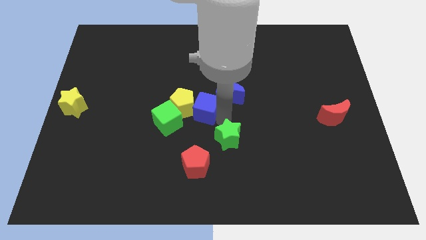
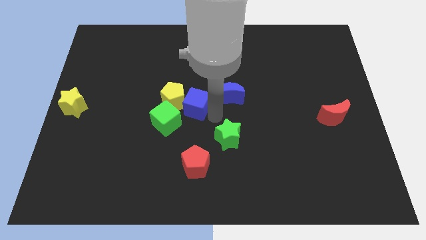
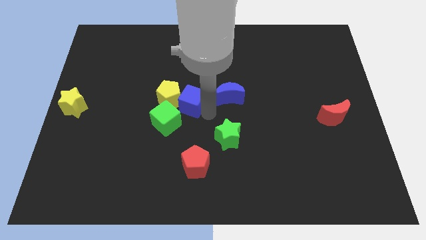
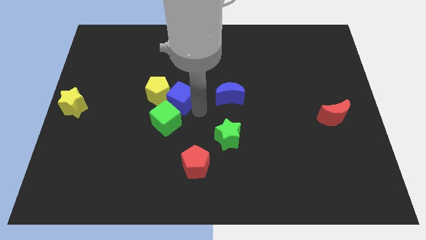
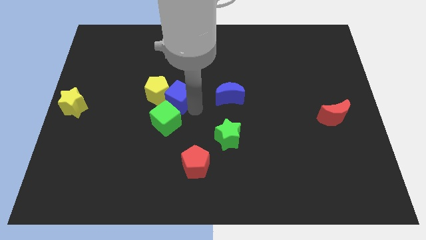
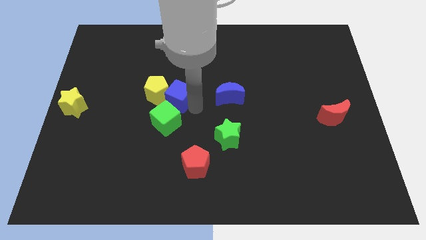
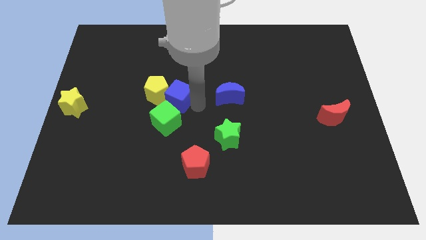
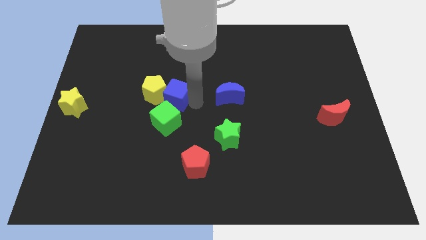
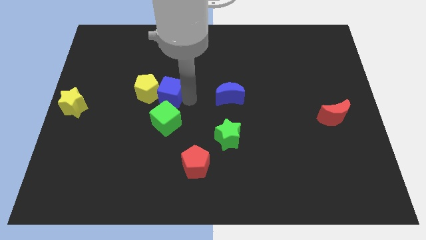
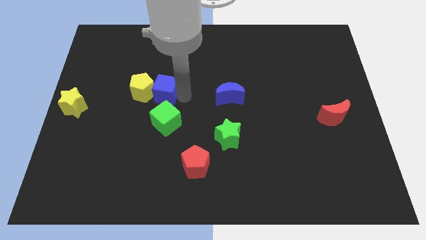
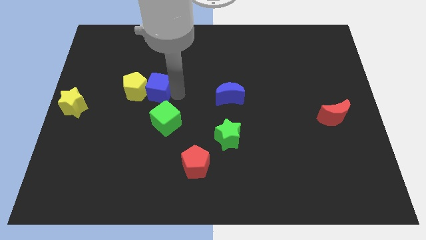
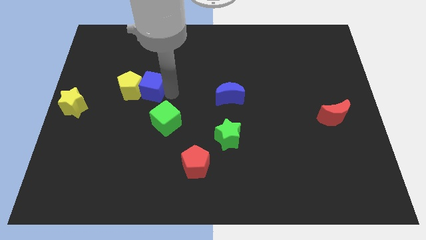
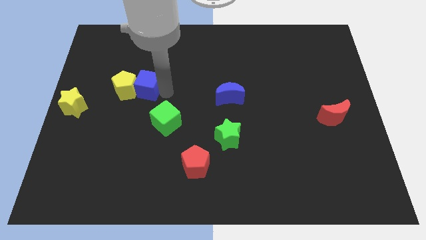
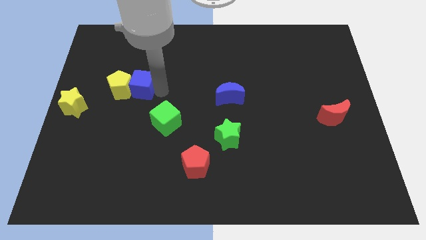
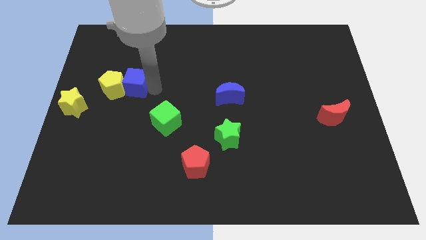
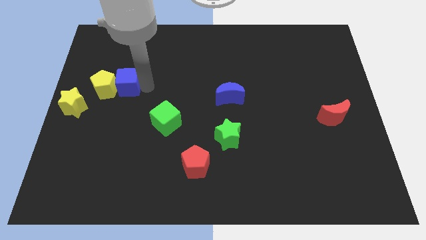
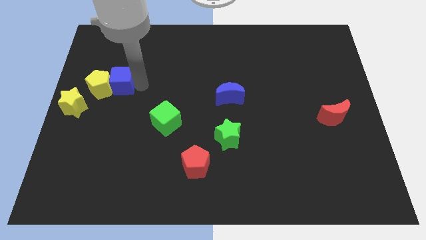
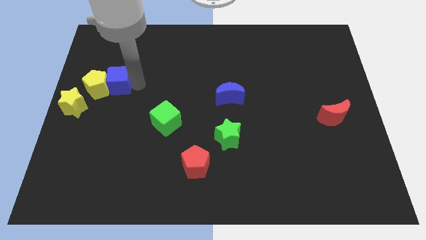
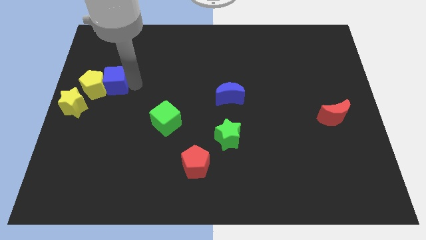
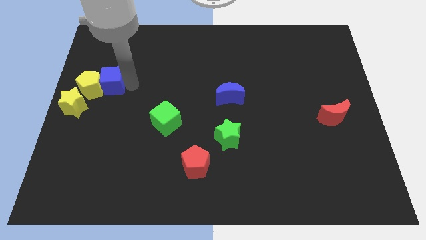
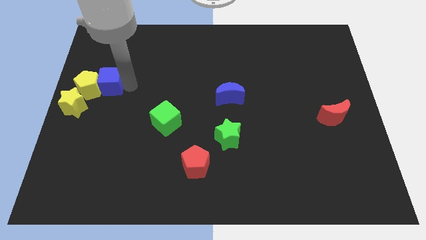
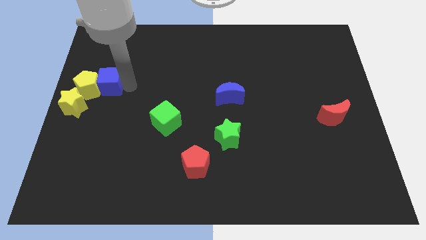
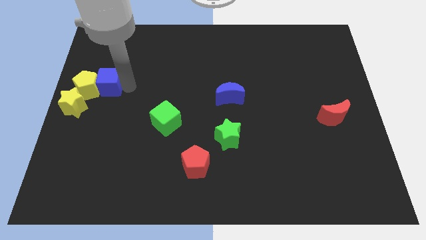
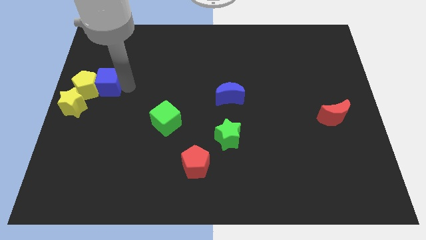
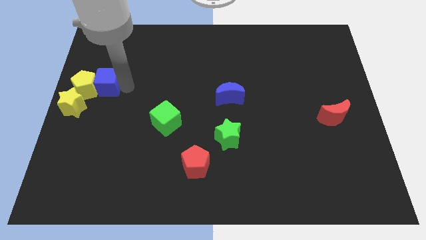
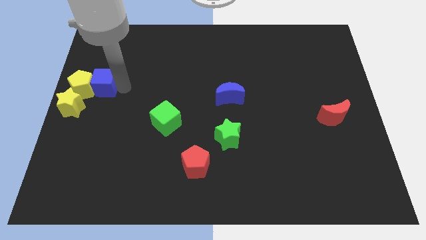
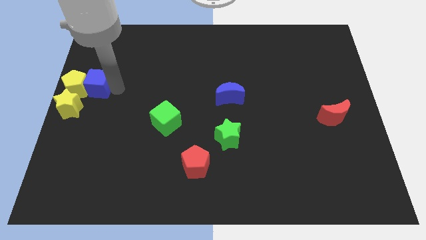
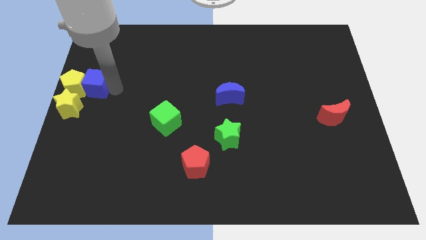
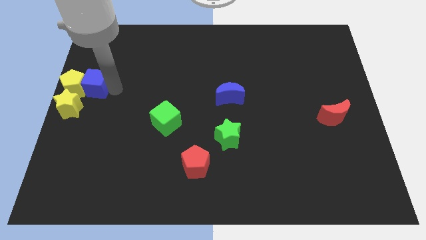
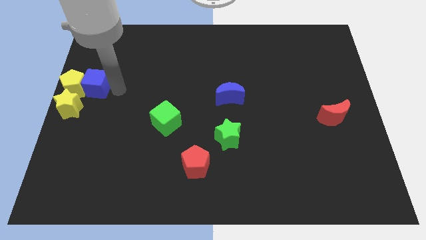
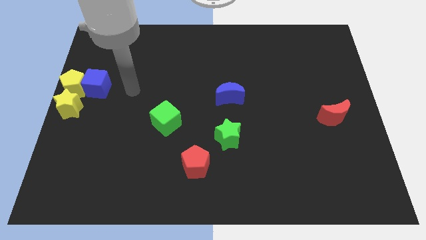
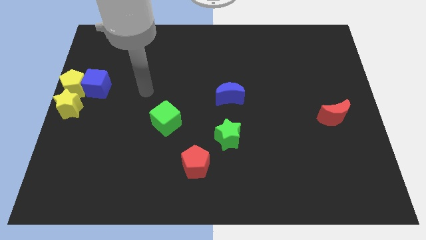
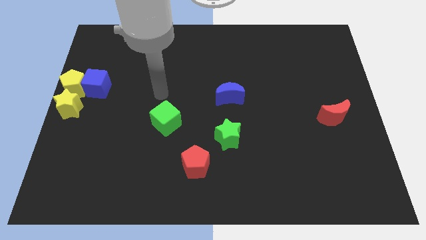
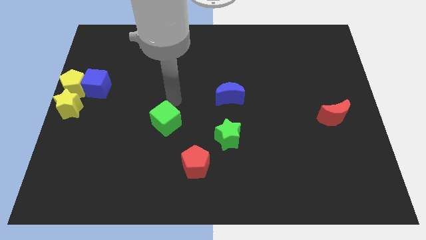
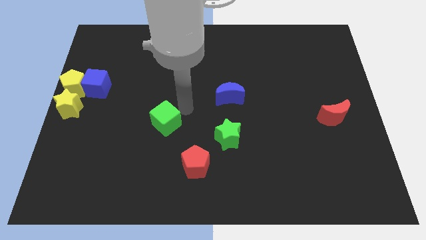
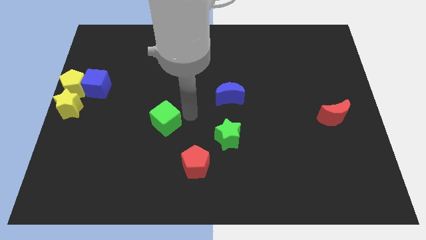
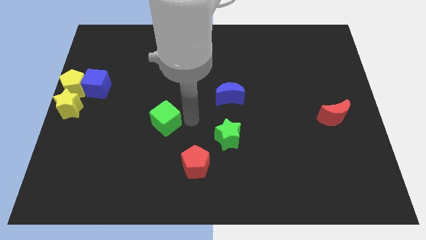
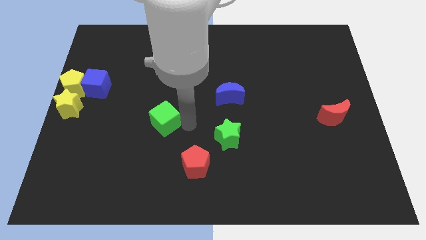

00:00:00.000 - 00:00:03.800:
place the yellow pentagon and blue cube above the yellow star

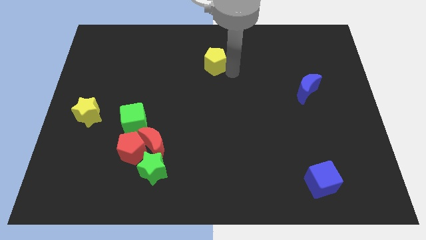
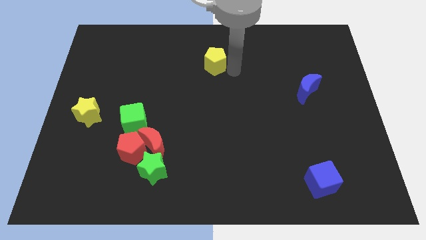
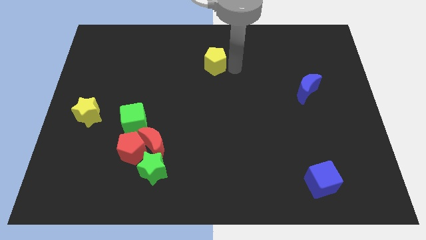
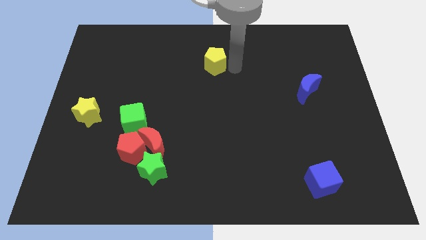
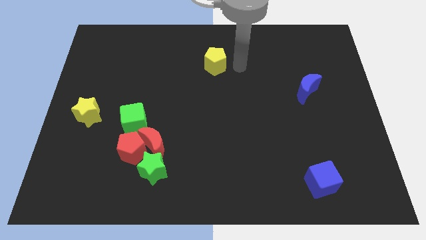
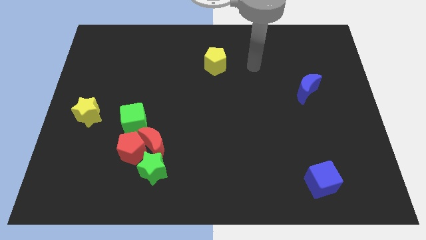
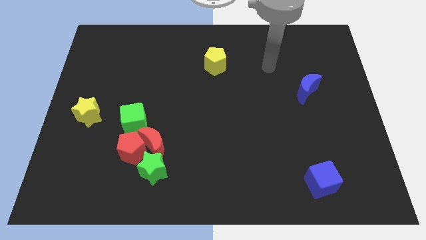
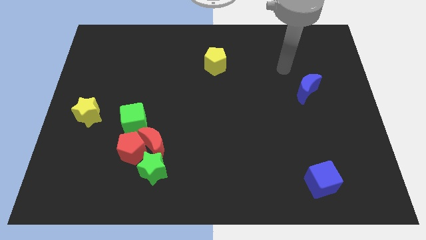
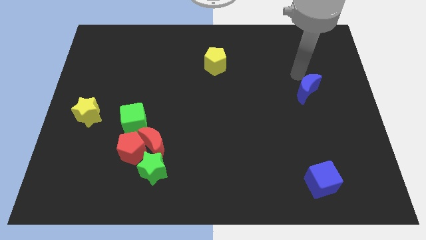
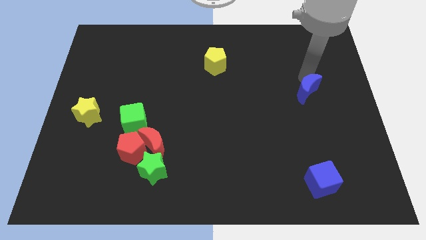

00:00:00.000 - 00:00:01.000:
move your arm away from the yellow pentagon

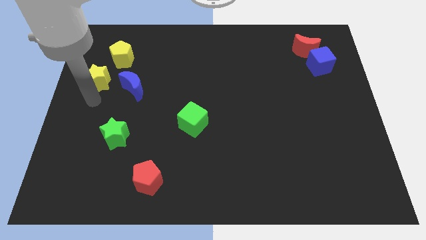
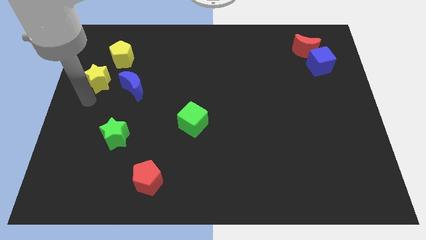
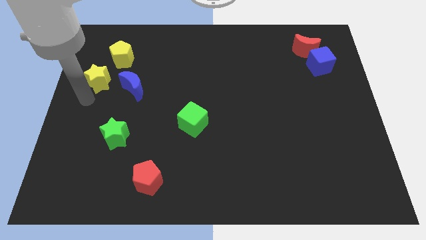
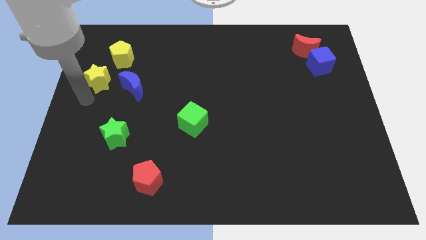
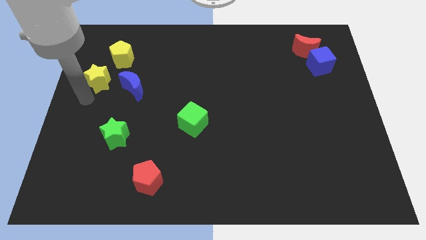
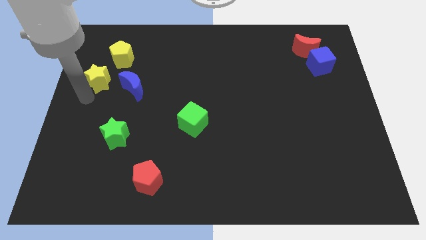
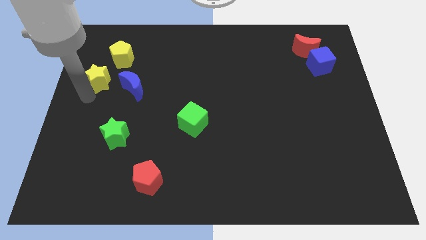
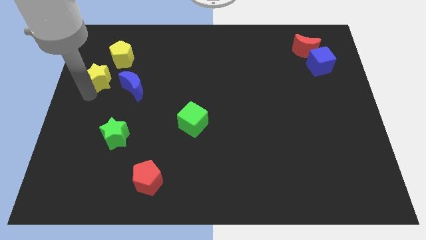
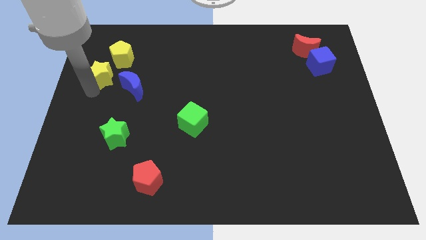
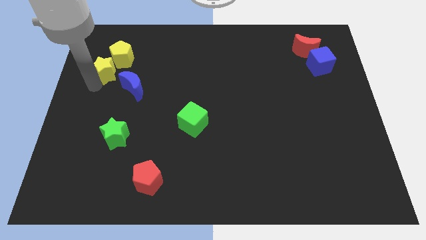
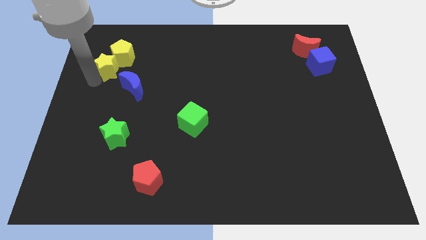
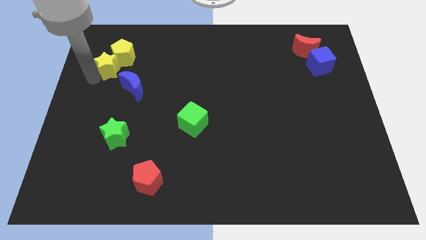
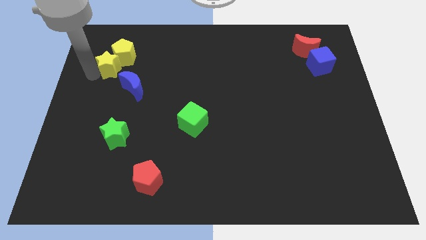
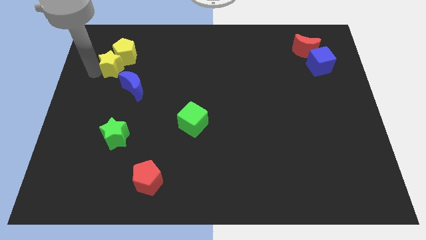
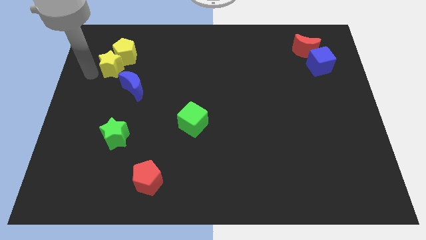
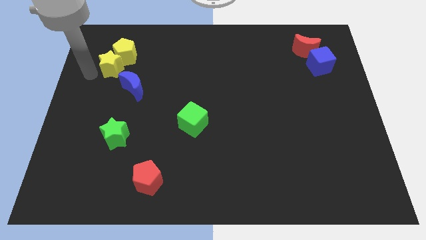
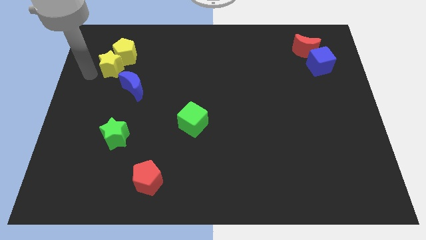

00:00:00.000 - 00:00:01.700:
push yellow star in to yellow pentagon

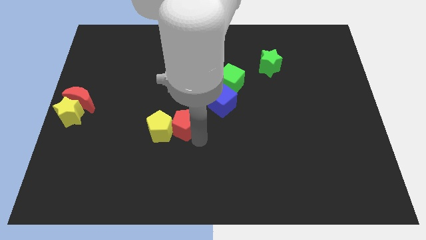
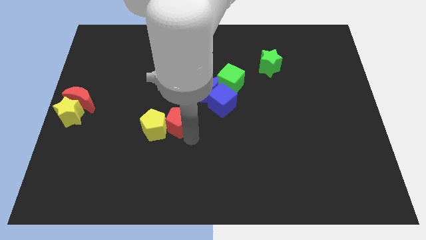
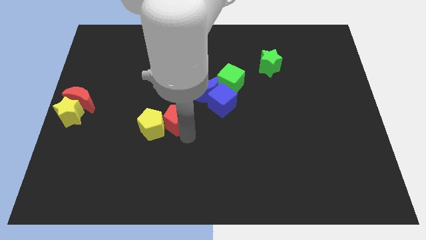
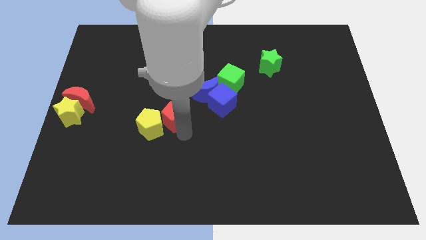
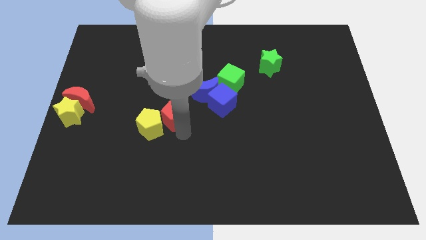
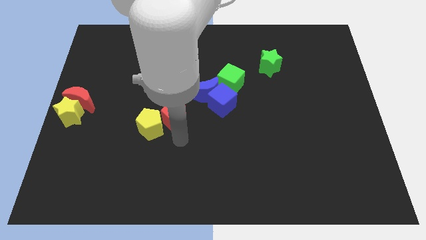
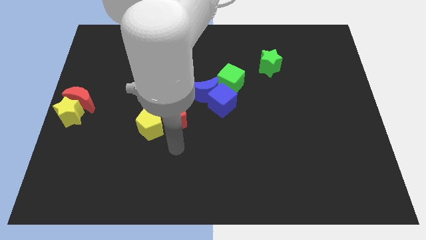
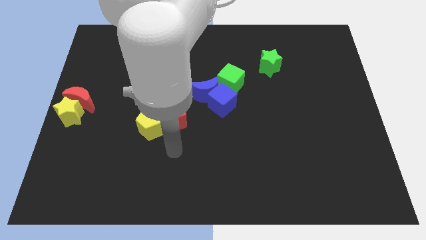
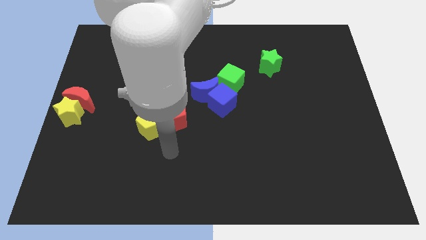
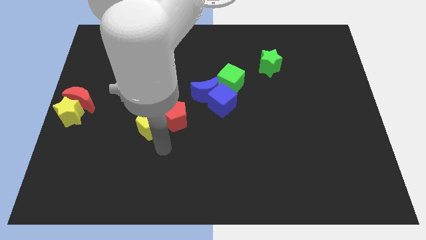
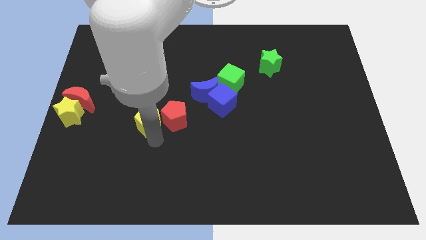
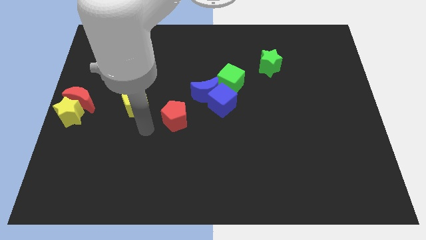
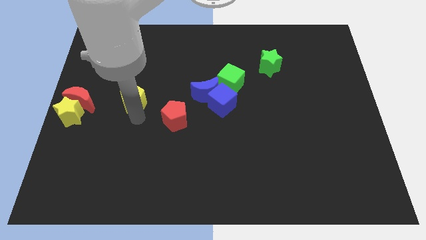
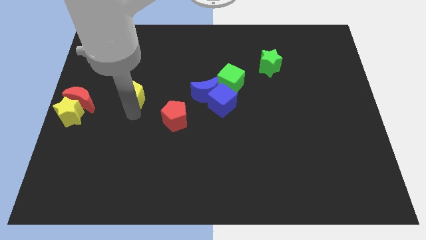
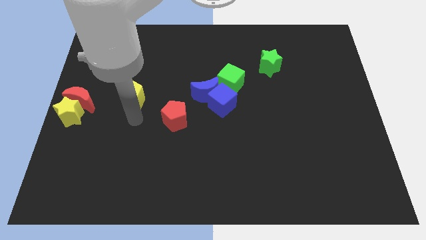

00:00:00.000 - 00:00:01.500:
push yellow pentagon to the right side of the red crescent

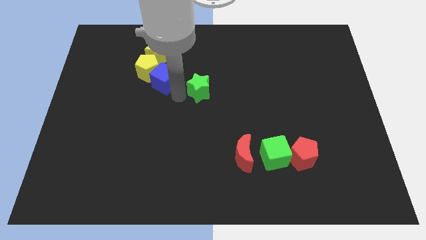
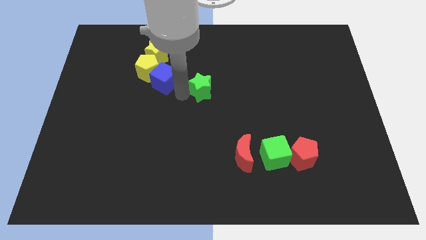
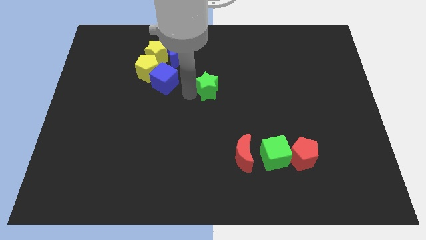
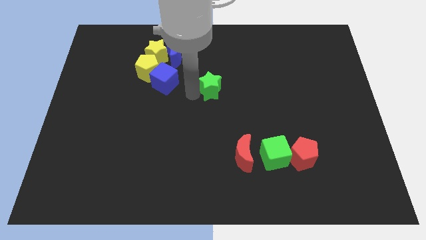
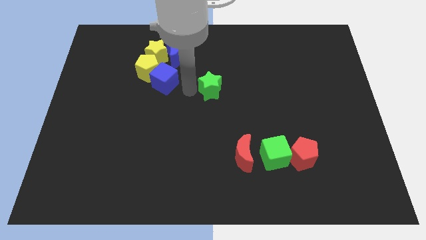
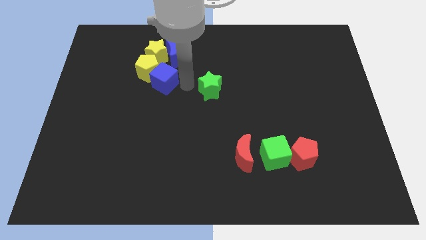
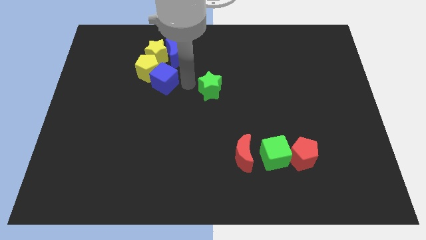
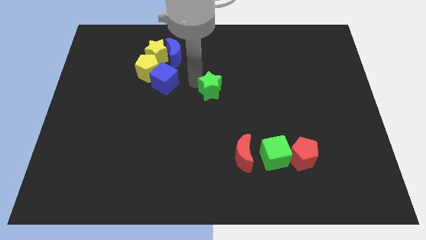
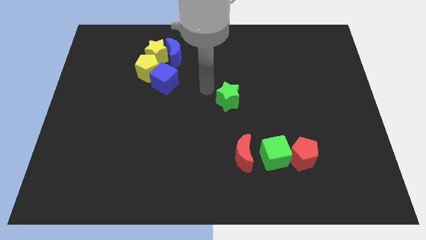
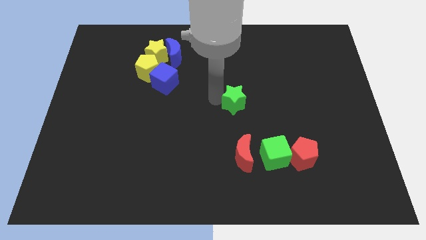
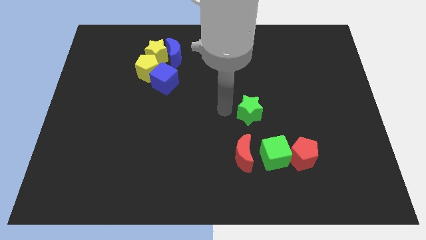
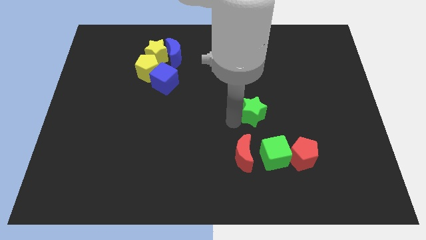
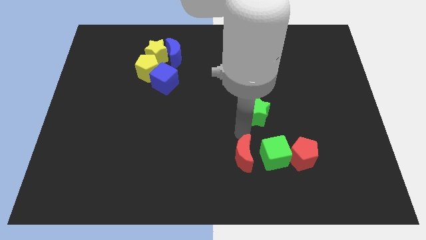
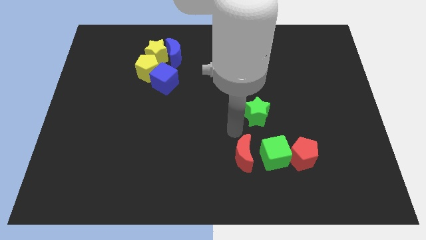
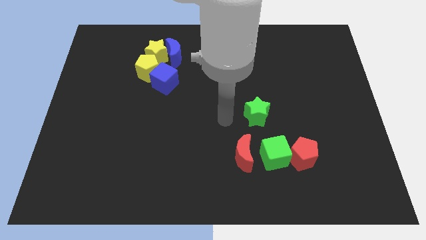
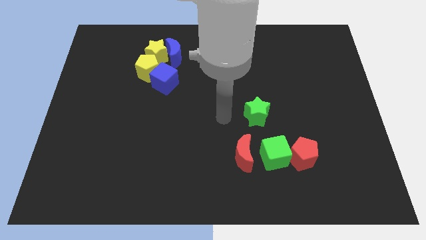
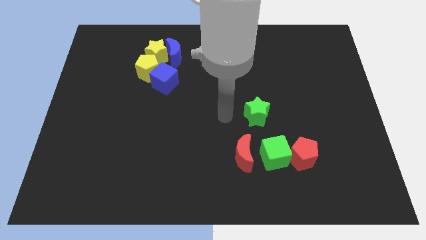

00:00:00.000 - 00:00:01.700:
drag the green cube diagonally on the top left side of the green cube
